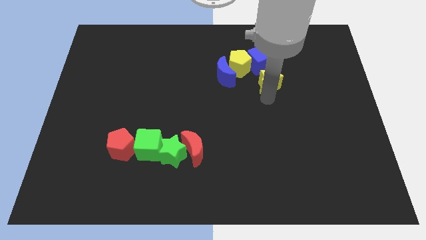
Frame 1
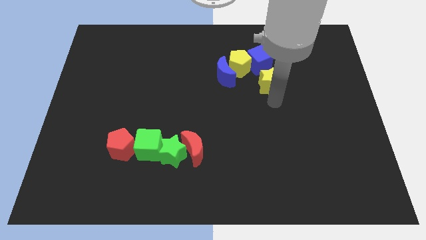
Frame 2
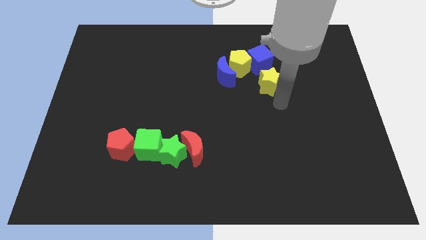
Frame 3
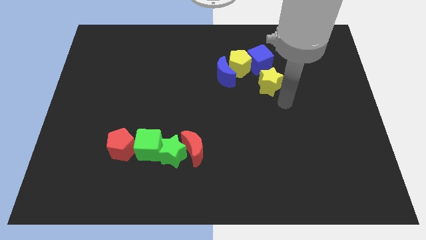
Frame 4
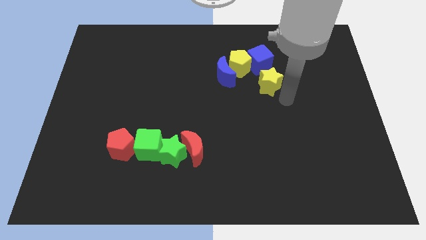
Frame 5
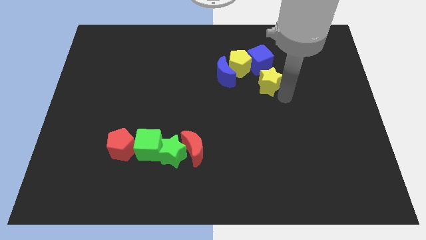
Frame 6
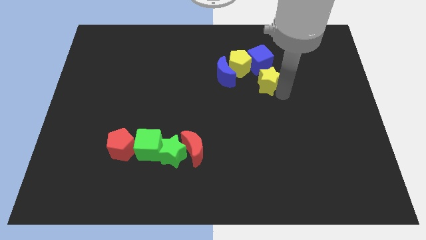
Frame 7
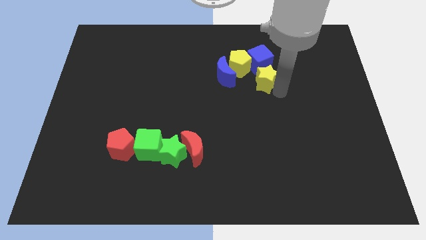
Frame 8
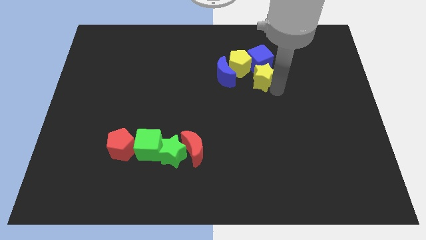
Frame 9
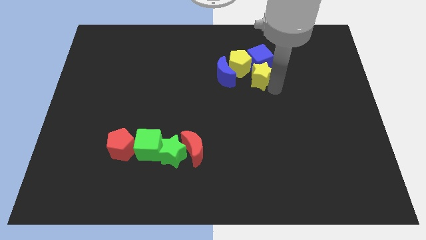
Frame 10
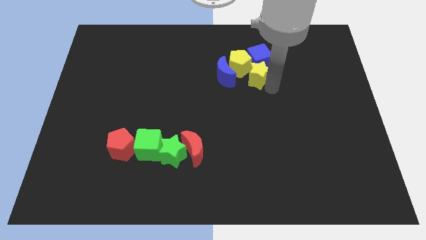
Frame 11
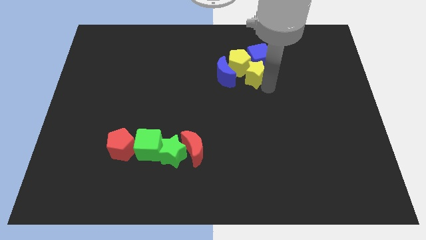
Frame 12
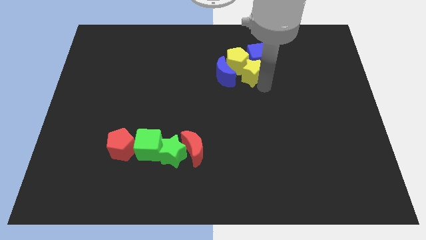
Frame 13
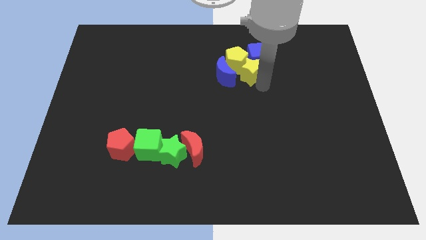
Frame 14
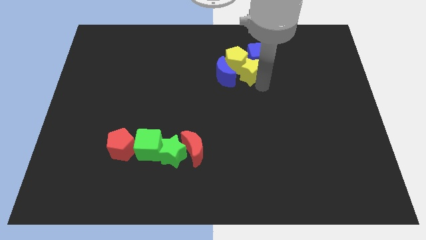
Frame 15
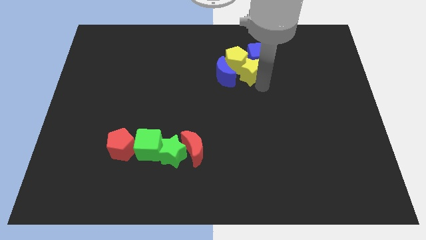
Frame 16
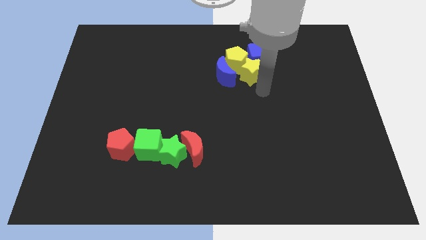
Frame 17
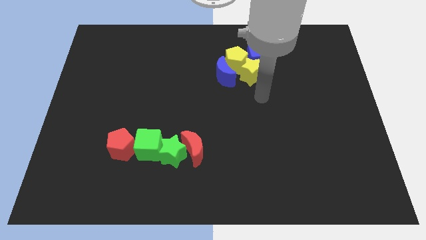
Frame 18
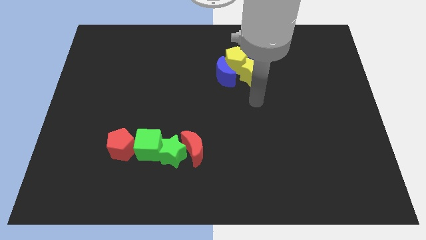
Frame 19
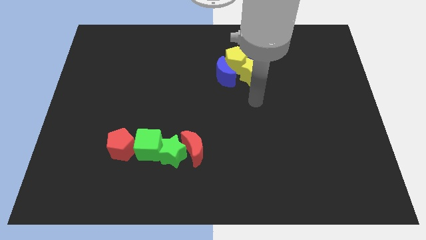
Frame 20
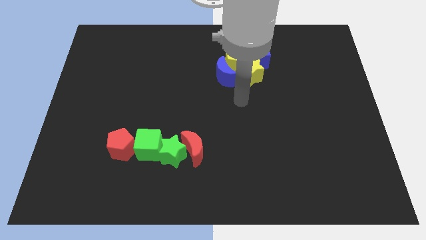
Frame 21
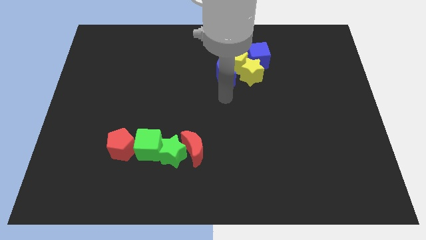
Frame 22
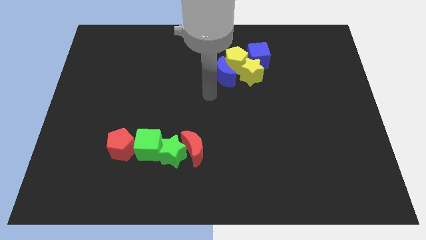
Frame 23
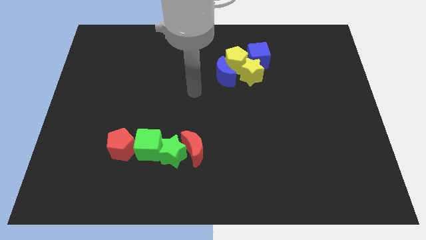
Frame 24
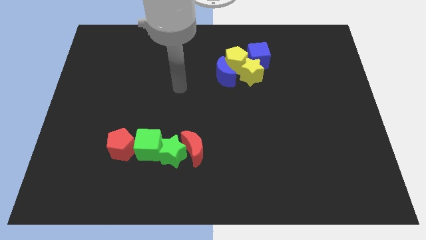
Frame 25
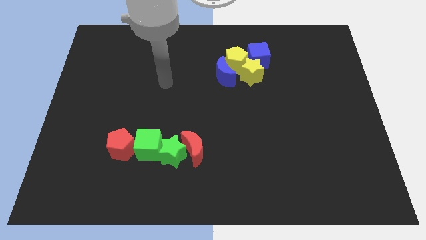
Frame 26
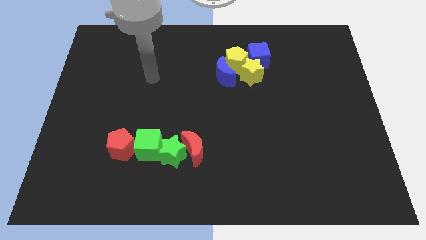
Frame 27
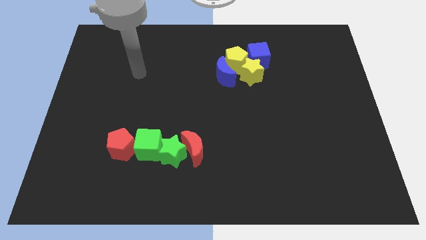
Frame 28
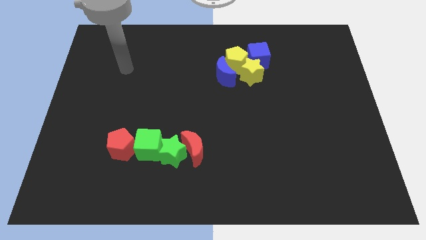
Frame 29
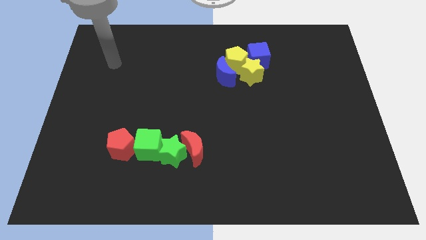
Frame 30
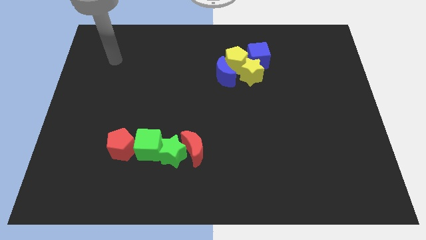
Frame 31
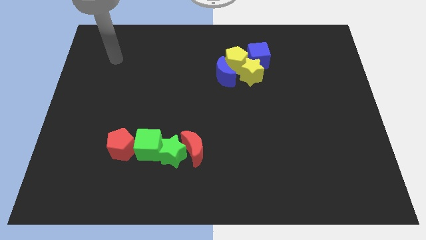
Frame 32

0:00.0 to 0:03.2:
place the yellow star to the right of the blue moon

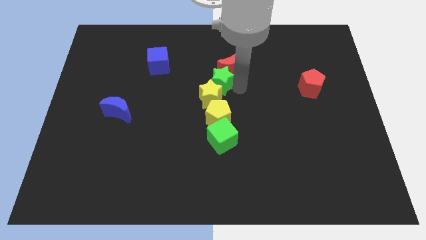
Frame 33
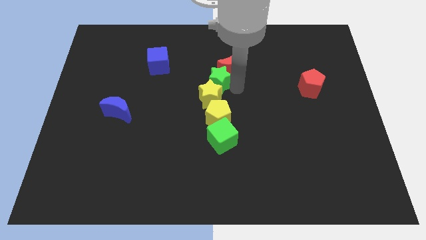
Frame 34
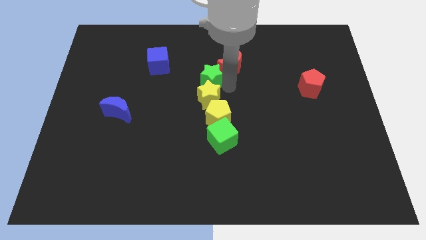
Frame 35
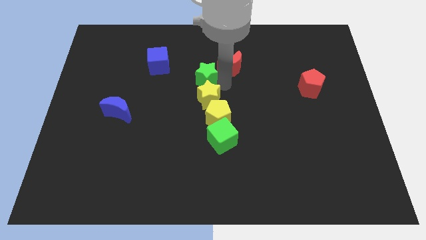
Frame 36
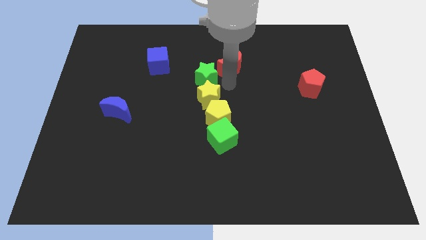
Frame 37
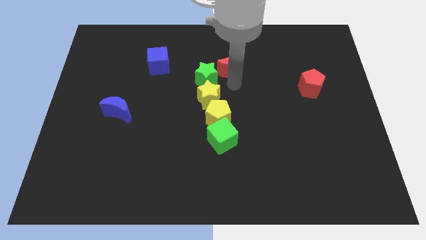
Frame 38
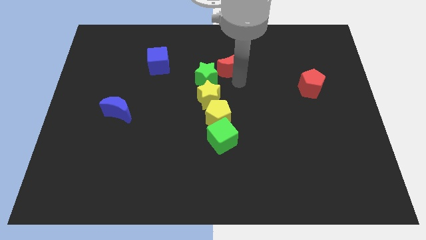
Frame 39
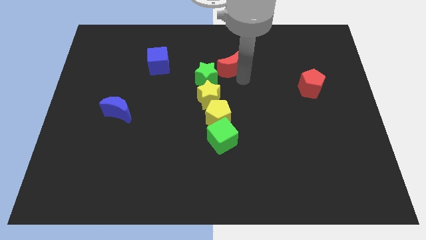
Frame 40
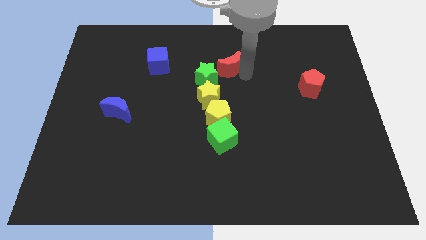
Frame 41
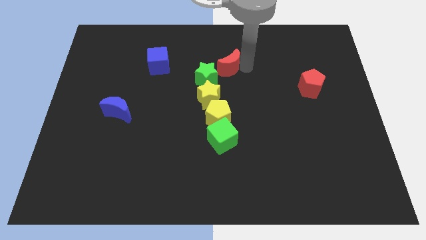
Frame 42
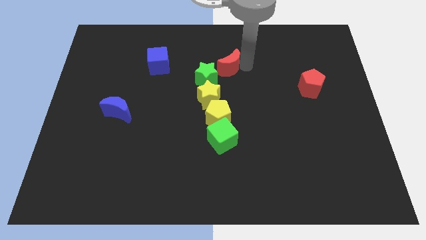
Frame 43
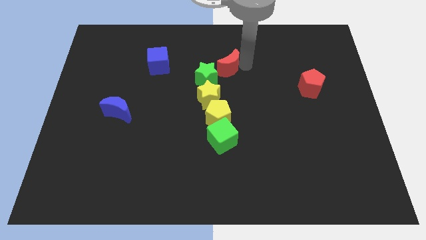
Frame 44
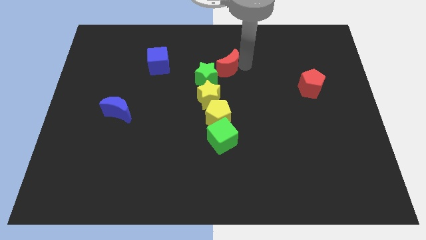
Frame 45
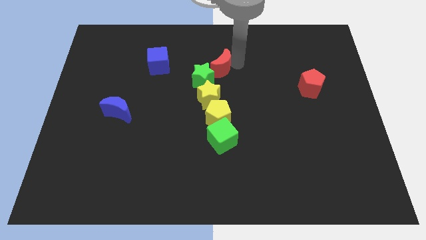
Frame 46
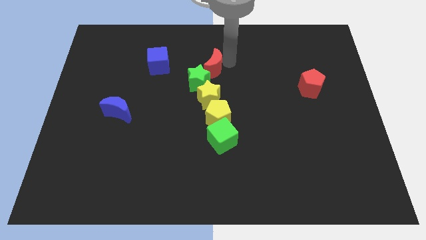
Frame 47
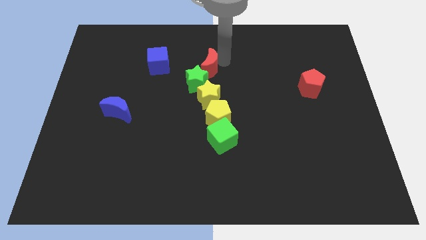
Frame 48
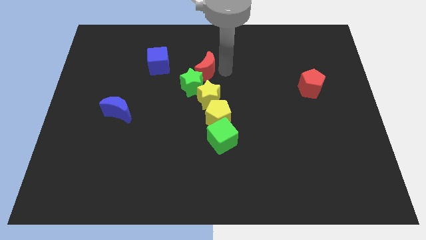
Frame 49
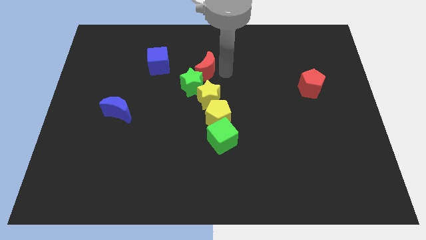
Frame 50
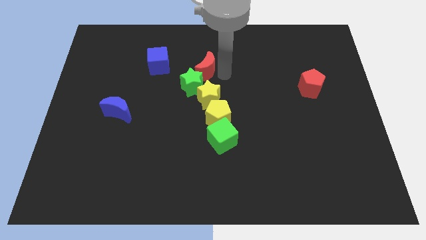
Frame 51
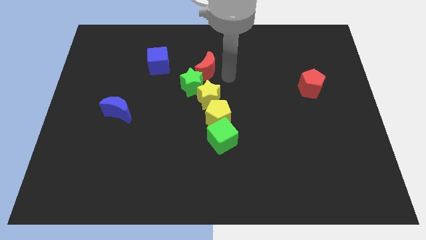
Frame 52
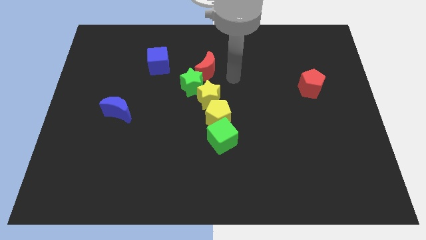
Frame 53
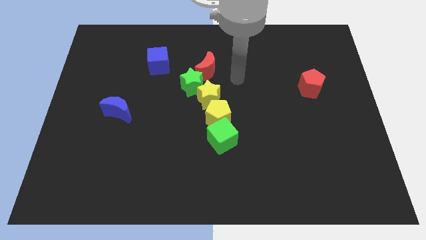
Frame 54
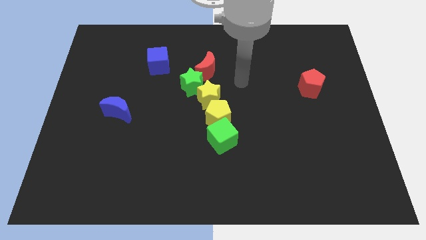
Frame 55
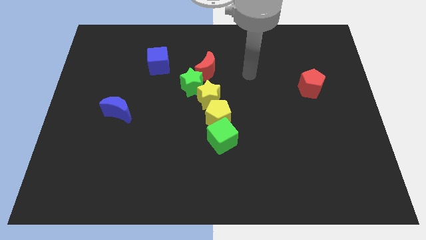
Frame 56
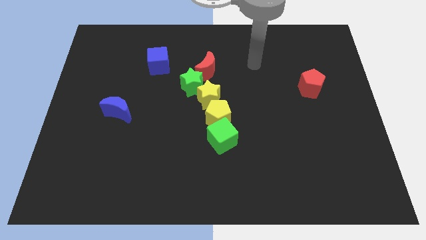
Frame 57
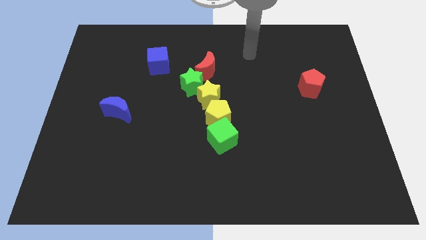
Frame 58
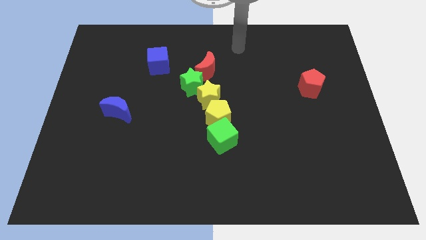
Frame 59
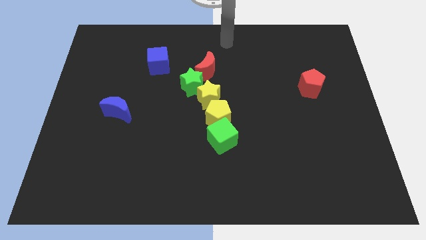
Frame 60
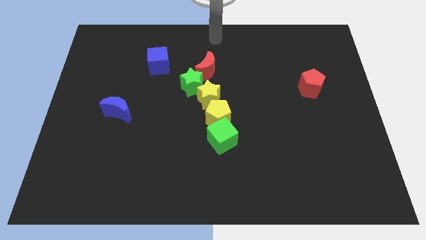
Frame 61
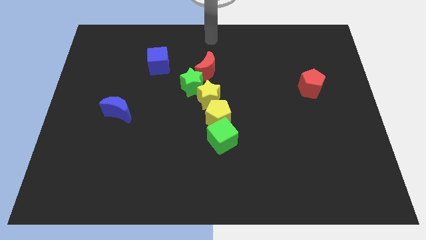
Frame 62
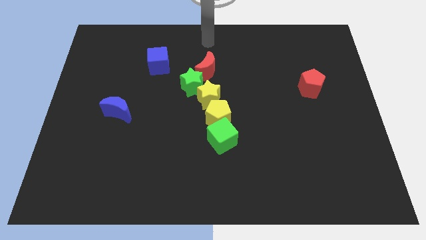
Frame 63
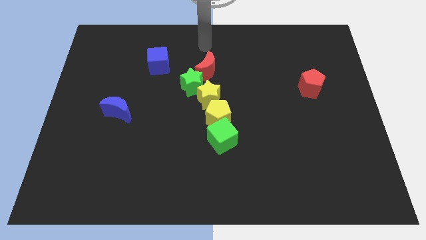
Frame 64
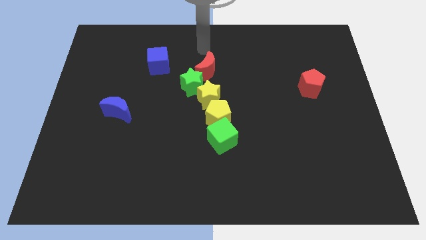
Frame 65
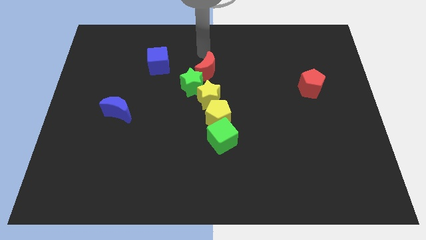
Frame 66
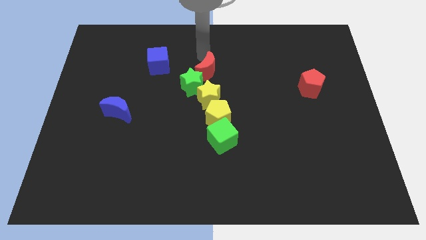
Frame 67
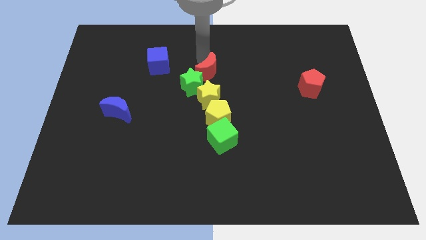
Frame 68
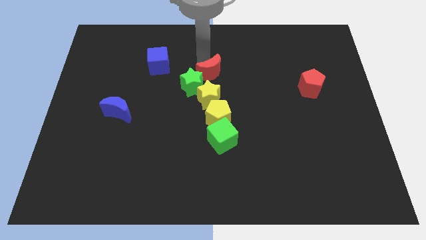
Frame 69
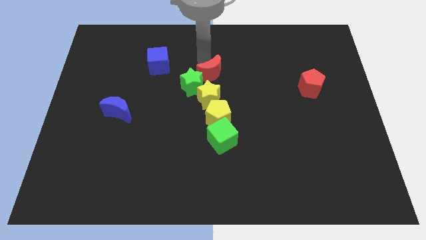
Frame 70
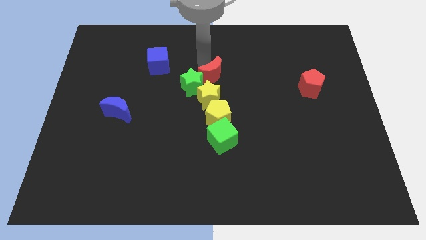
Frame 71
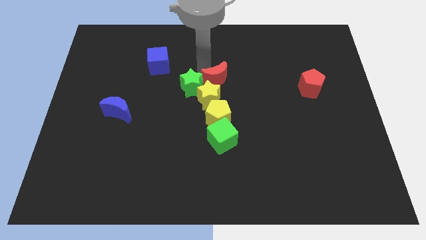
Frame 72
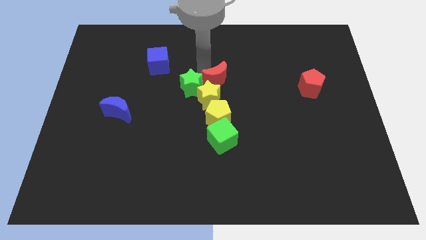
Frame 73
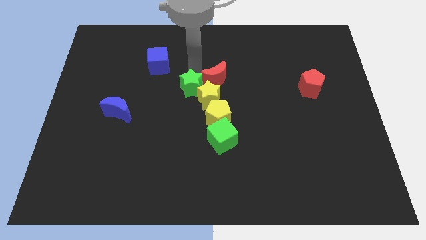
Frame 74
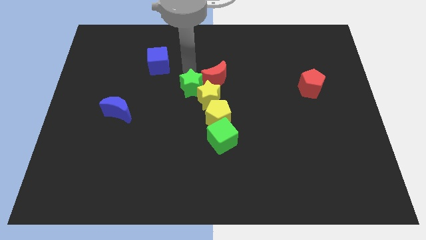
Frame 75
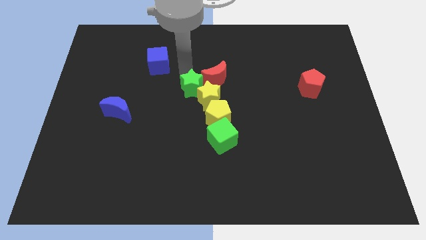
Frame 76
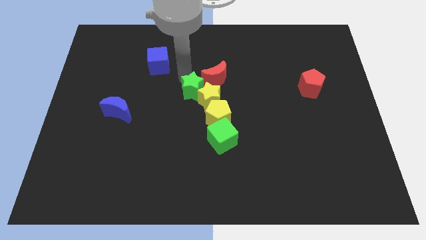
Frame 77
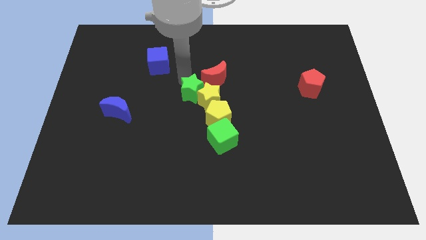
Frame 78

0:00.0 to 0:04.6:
move the red crescent above the yellow star

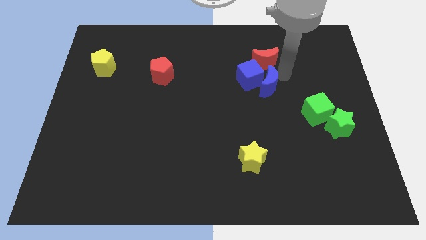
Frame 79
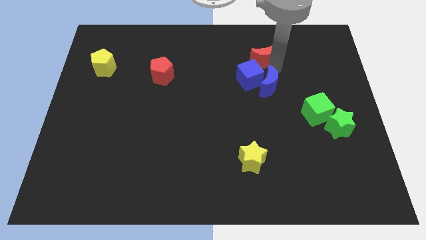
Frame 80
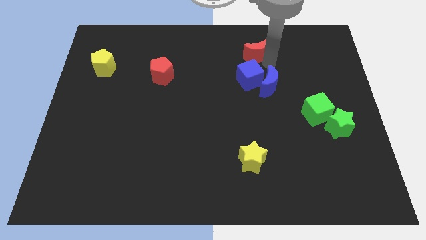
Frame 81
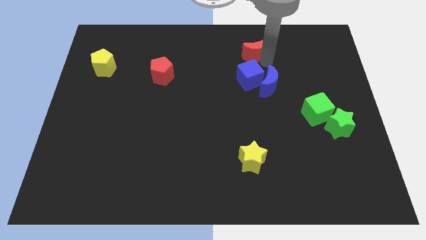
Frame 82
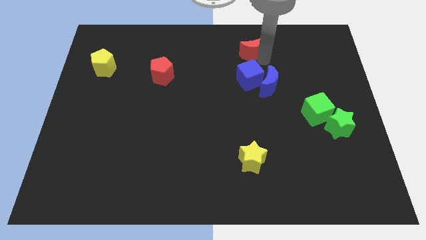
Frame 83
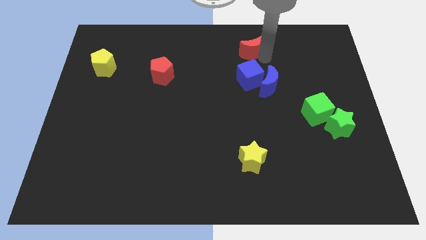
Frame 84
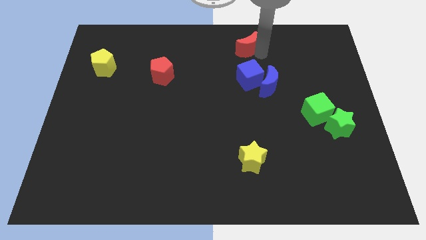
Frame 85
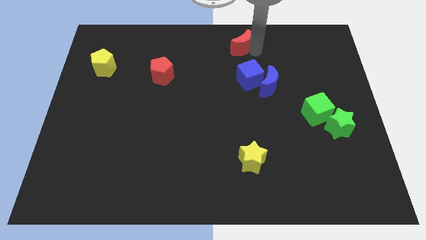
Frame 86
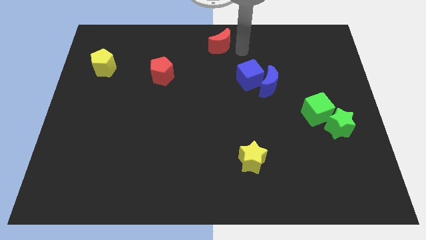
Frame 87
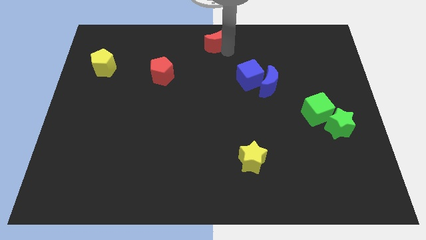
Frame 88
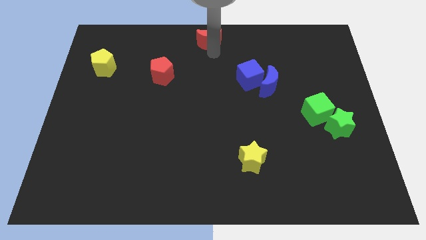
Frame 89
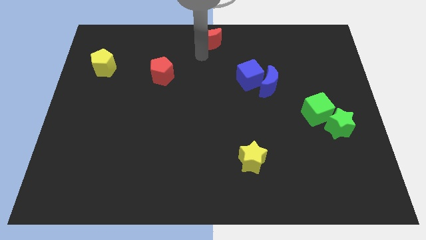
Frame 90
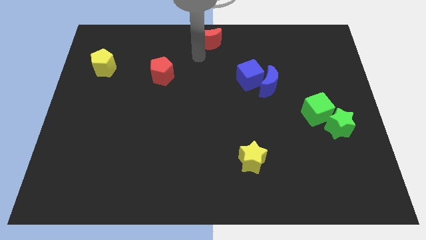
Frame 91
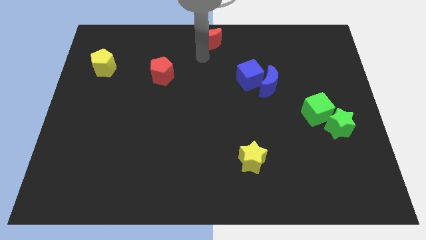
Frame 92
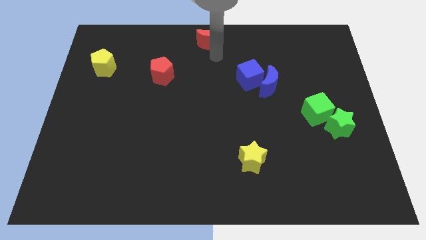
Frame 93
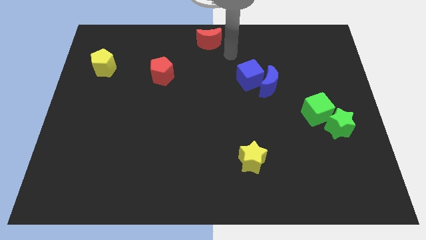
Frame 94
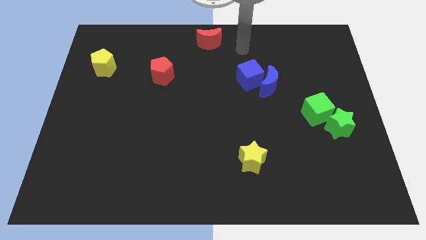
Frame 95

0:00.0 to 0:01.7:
place red crescent at the top center of the board
